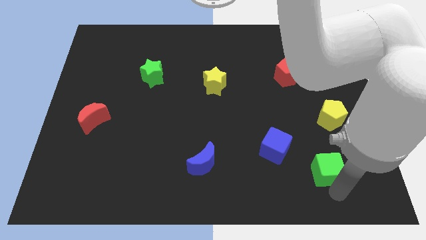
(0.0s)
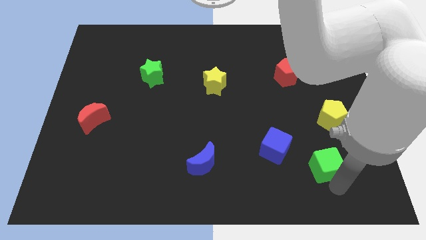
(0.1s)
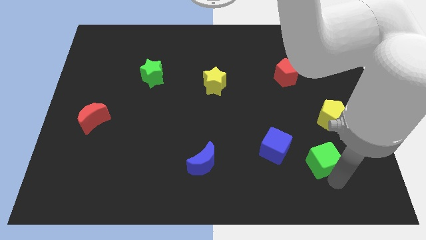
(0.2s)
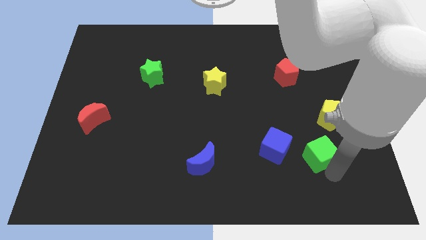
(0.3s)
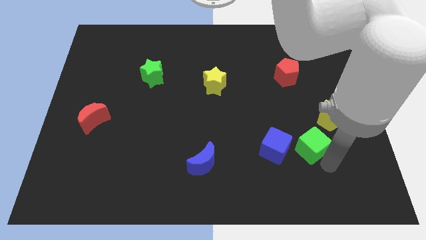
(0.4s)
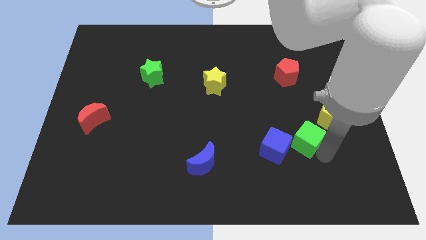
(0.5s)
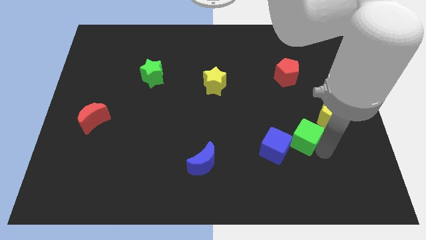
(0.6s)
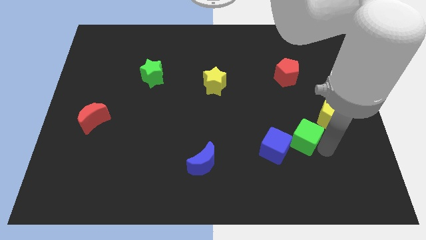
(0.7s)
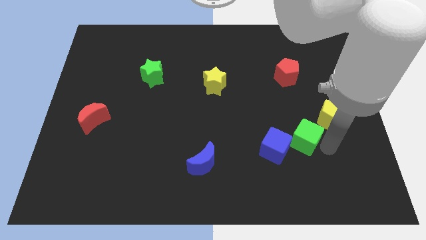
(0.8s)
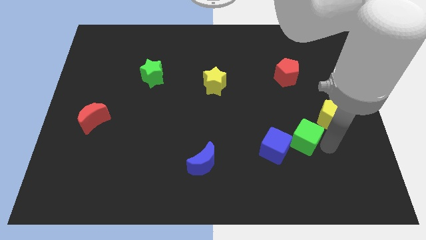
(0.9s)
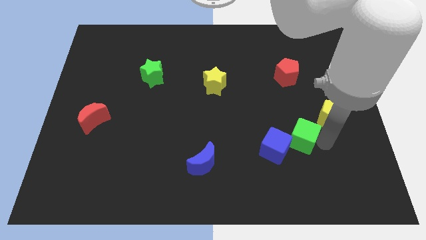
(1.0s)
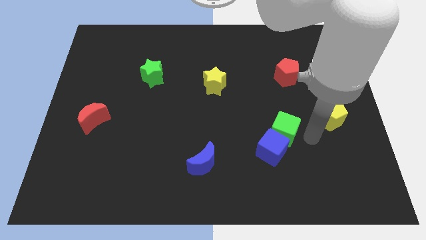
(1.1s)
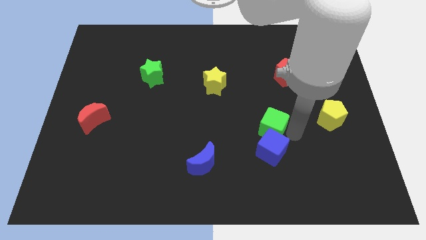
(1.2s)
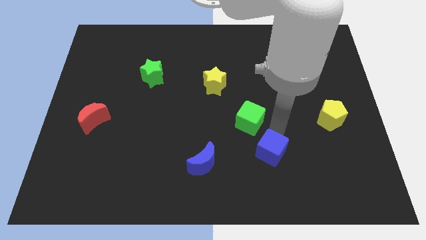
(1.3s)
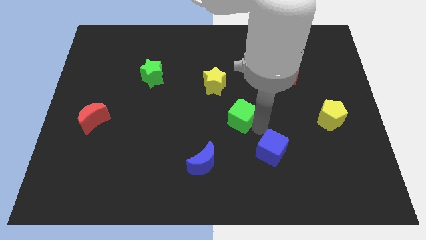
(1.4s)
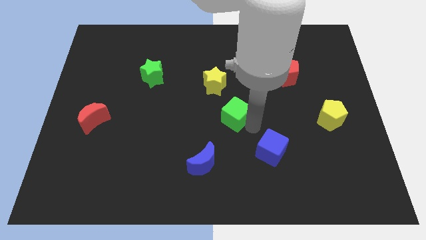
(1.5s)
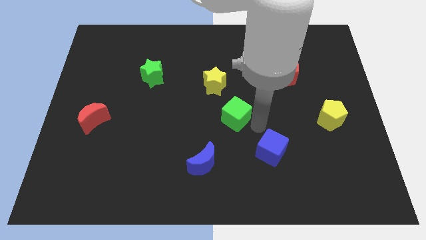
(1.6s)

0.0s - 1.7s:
move the green cube towards the center of the board

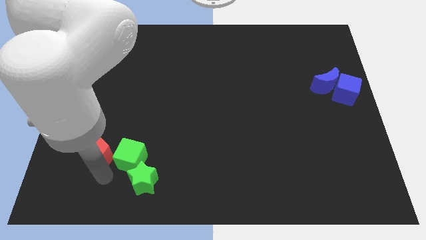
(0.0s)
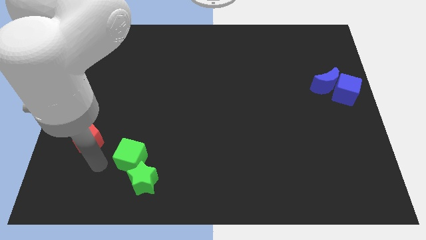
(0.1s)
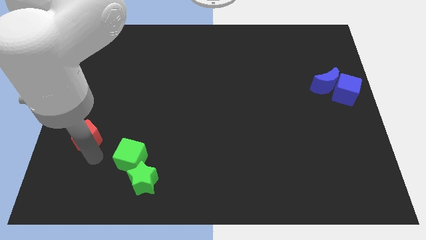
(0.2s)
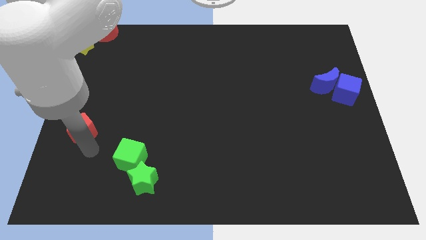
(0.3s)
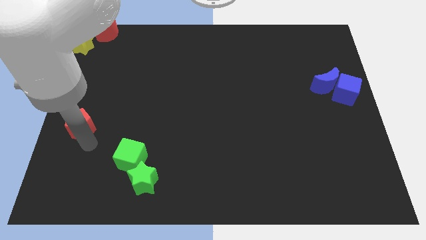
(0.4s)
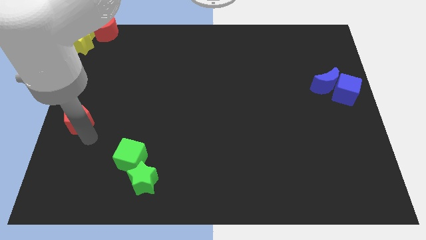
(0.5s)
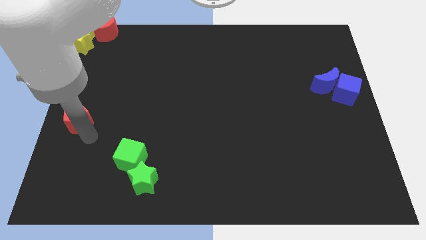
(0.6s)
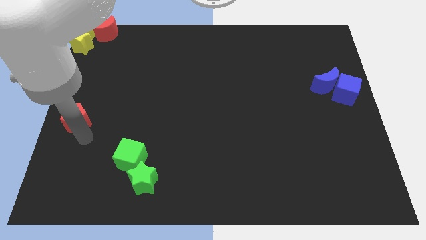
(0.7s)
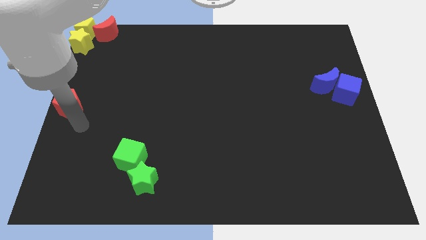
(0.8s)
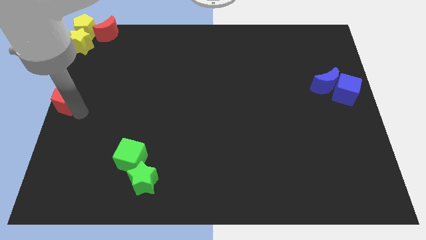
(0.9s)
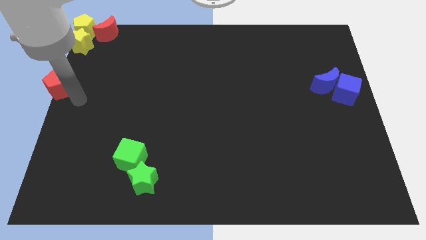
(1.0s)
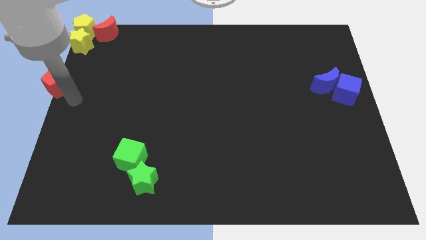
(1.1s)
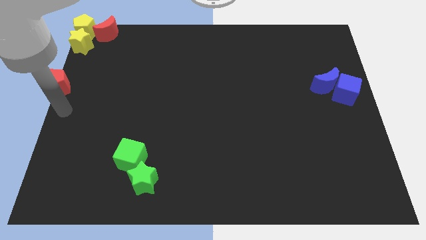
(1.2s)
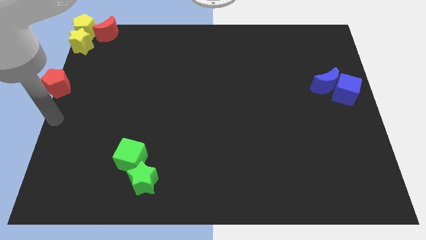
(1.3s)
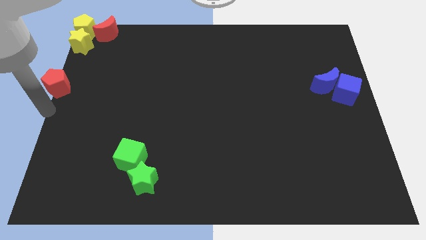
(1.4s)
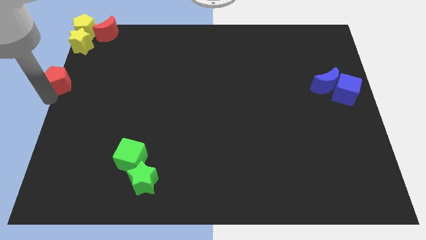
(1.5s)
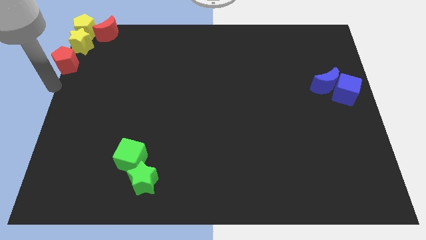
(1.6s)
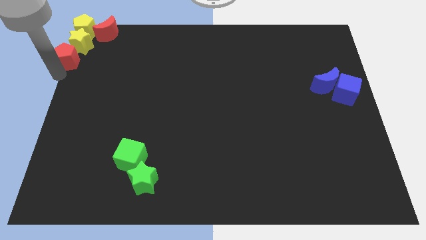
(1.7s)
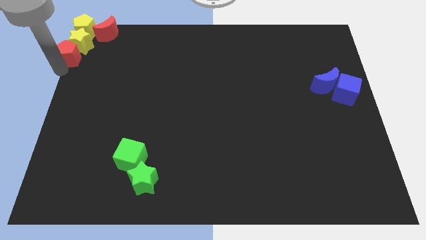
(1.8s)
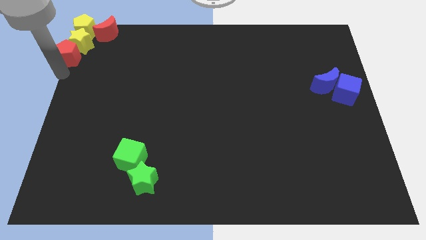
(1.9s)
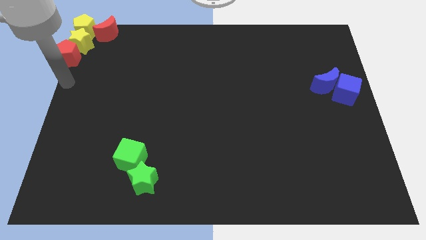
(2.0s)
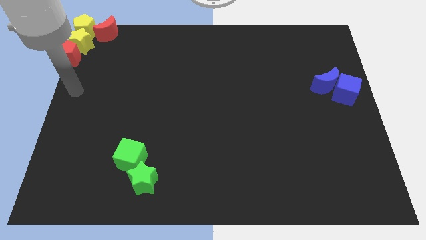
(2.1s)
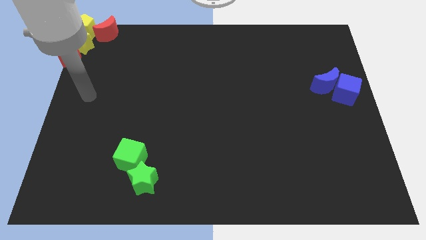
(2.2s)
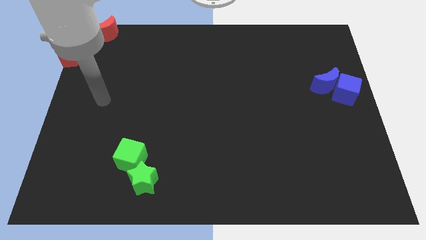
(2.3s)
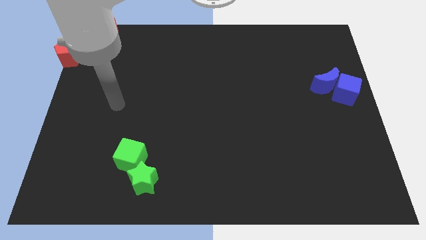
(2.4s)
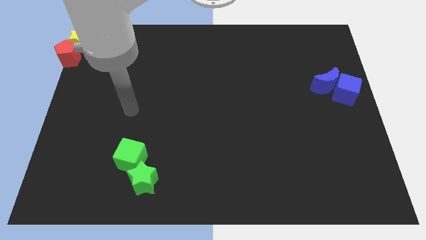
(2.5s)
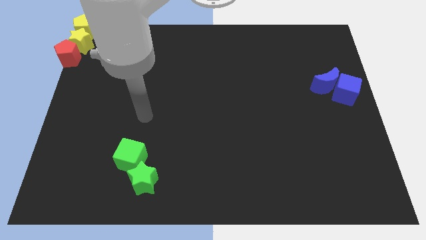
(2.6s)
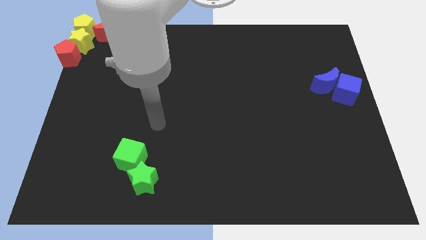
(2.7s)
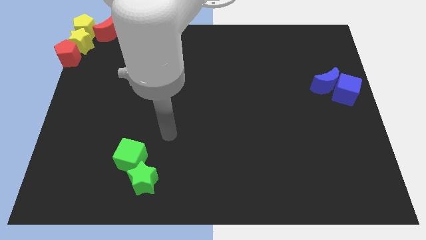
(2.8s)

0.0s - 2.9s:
push the red pentagon into the yellow star

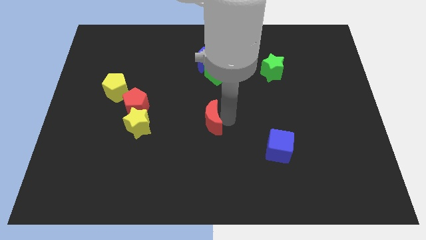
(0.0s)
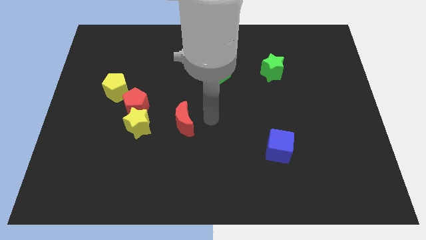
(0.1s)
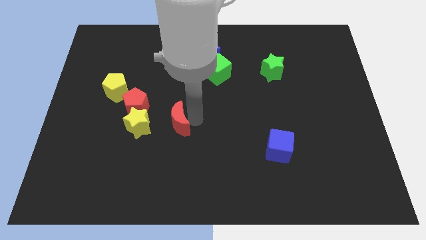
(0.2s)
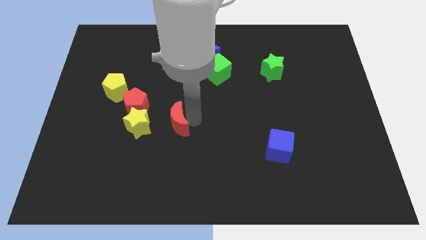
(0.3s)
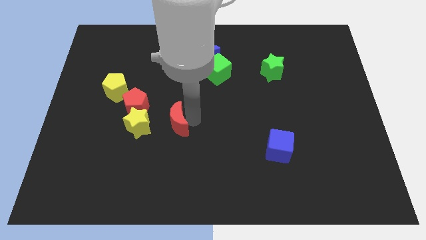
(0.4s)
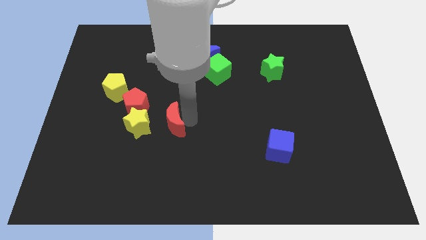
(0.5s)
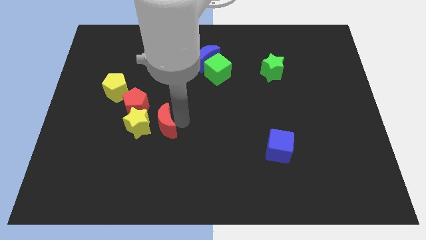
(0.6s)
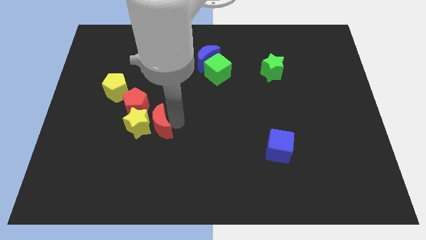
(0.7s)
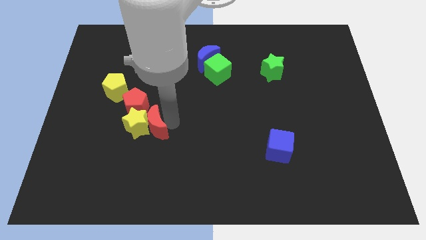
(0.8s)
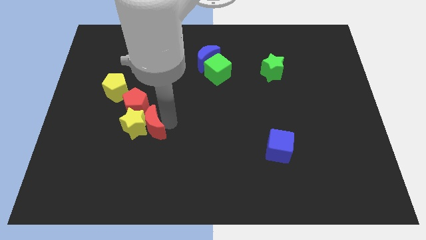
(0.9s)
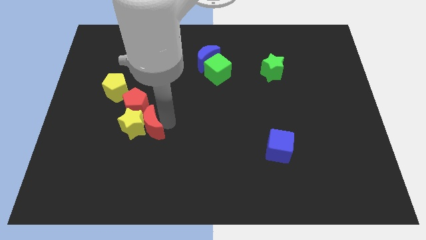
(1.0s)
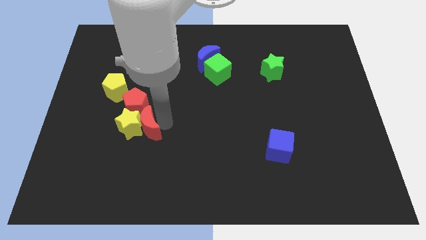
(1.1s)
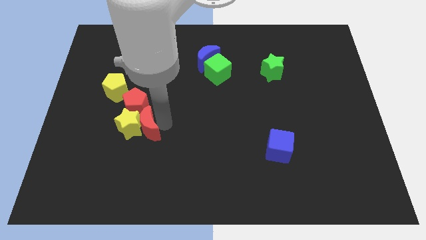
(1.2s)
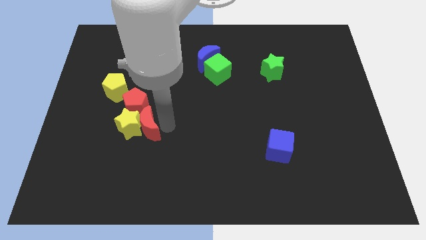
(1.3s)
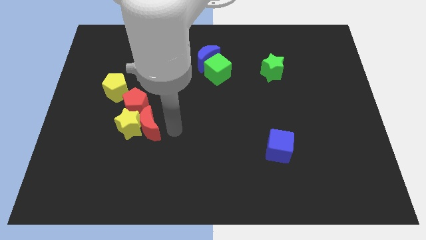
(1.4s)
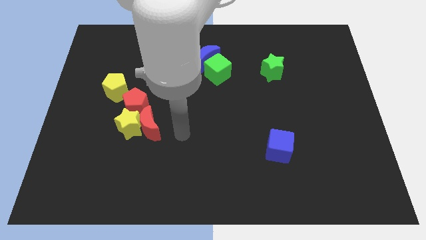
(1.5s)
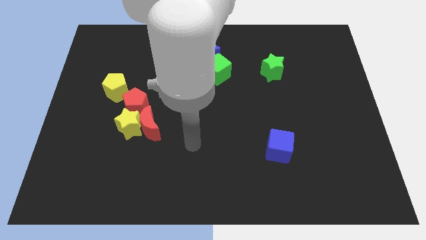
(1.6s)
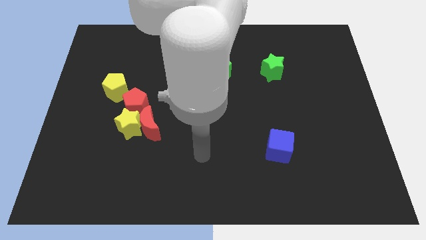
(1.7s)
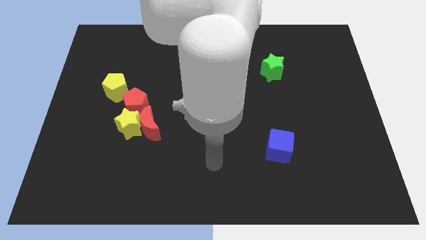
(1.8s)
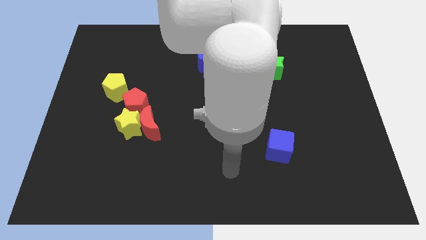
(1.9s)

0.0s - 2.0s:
push the red crescent into the yellow star

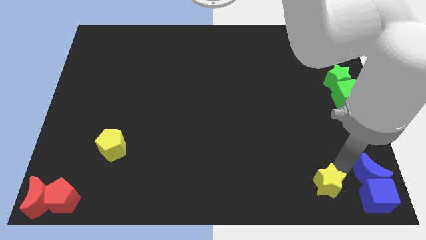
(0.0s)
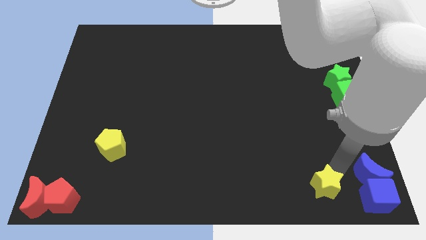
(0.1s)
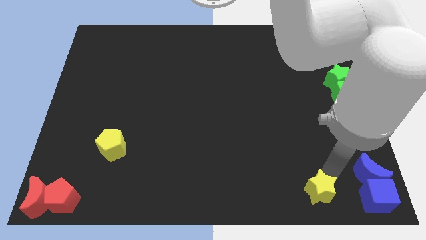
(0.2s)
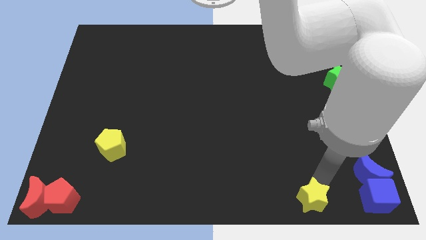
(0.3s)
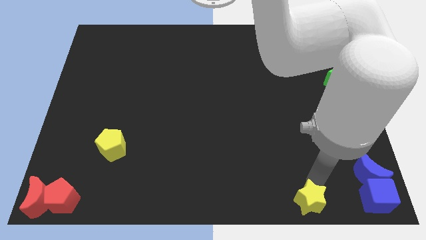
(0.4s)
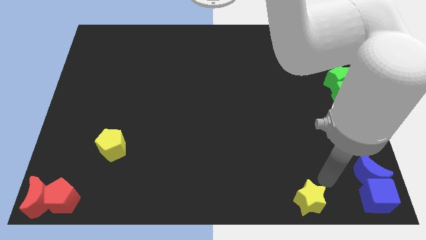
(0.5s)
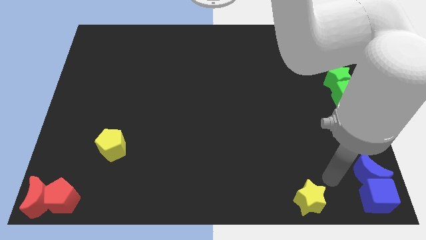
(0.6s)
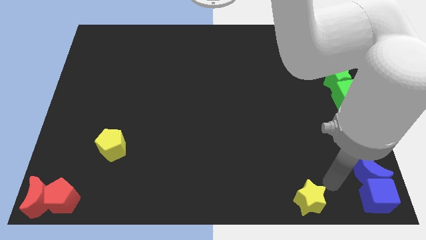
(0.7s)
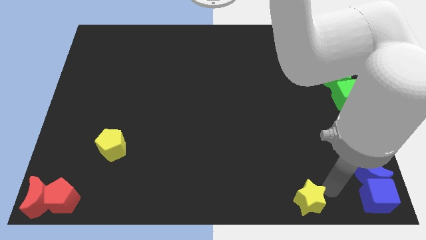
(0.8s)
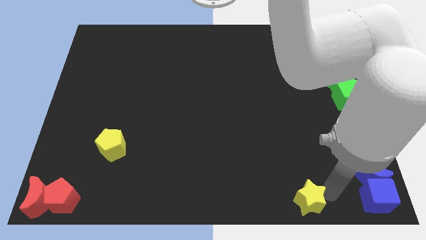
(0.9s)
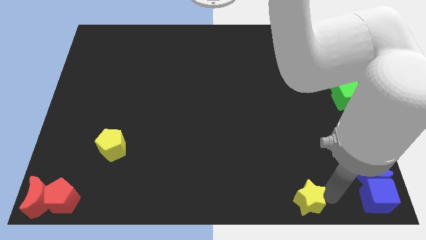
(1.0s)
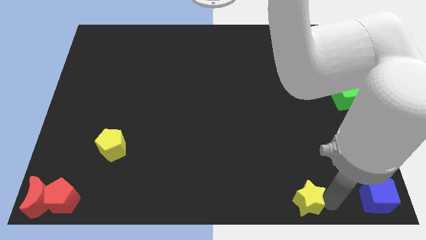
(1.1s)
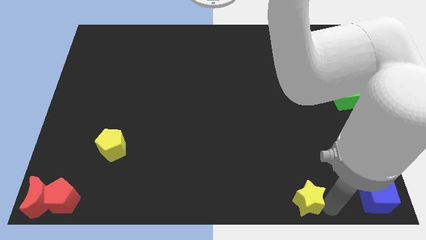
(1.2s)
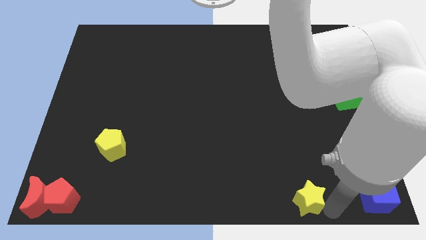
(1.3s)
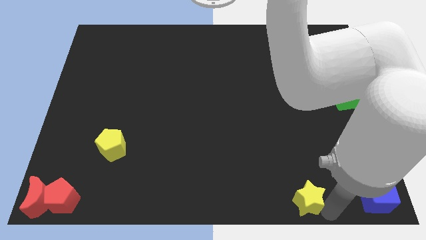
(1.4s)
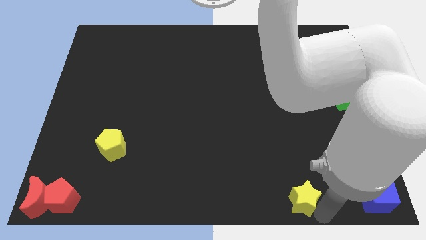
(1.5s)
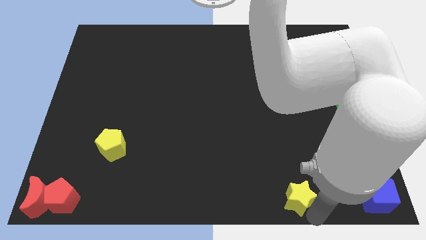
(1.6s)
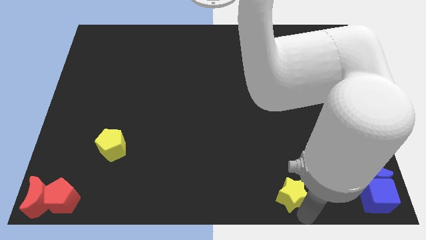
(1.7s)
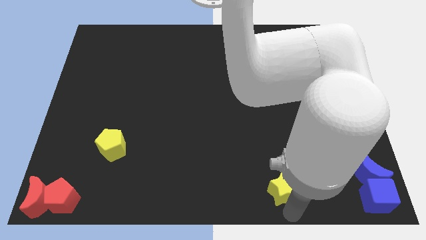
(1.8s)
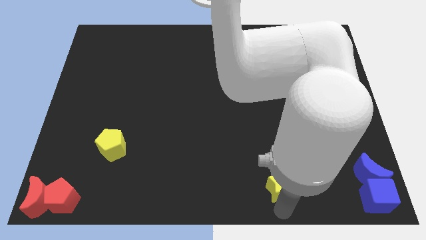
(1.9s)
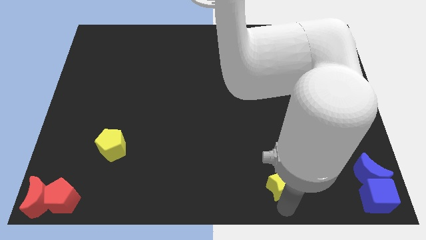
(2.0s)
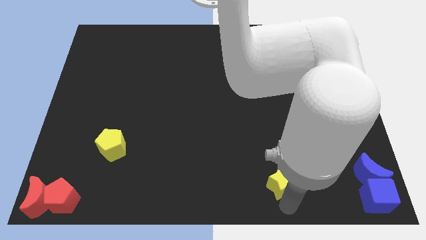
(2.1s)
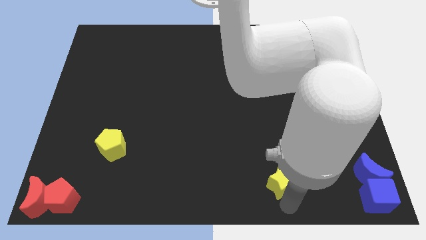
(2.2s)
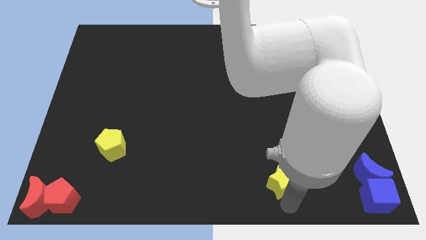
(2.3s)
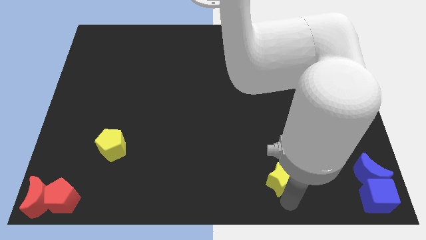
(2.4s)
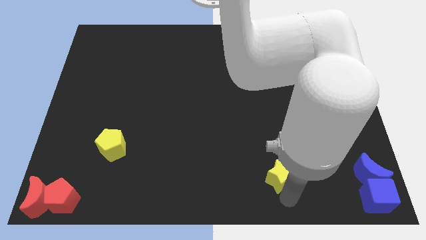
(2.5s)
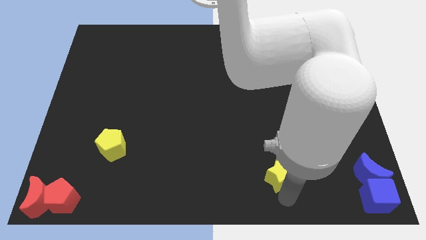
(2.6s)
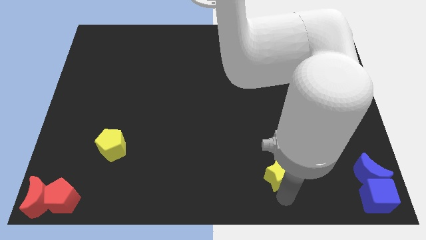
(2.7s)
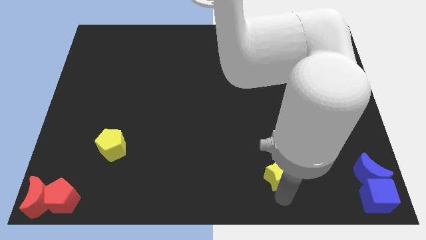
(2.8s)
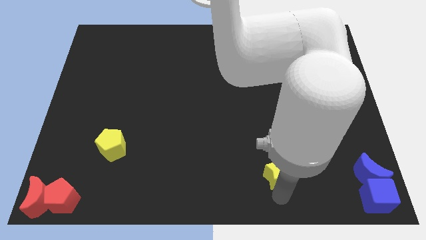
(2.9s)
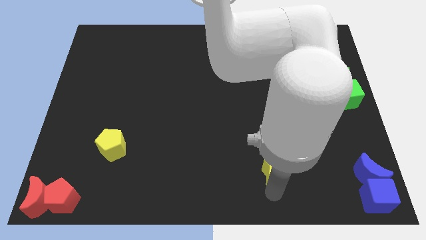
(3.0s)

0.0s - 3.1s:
move the yellow star parallel left to the blue crescent
